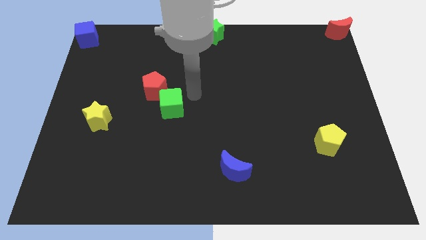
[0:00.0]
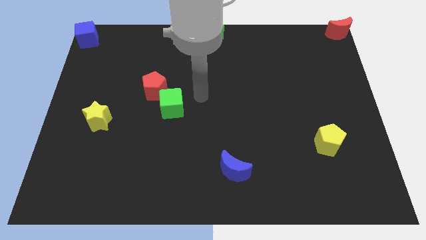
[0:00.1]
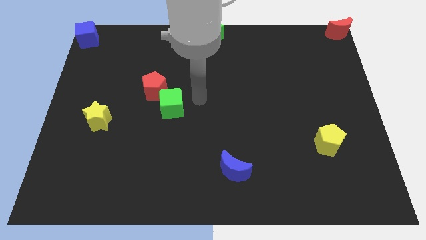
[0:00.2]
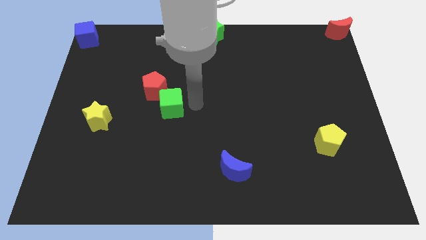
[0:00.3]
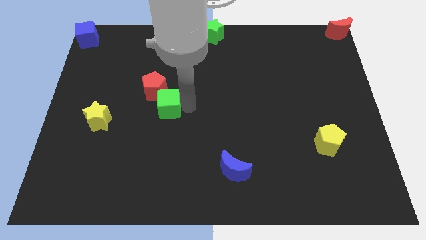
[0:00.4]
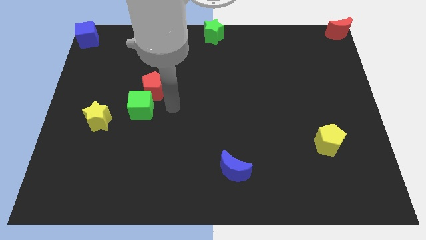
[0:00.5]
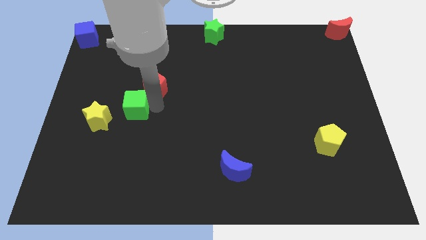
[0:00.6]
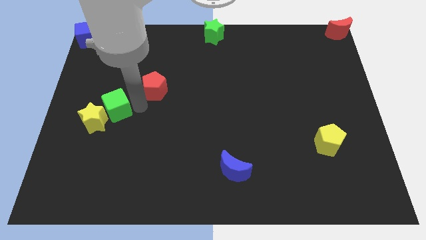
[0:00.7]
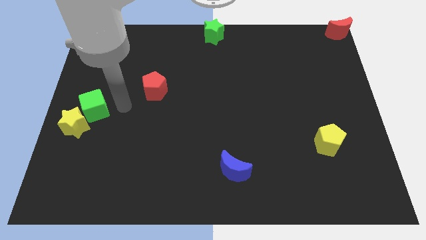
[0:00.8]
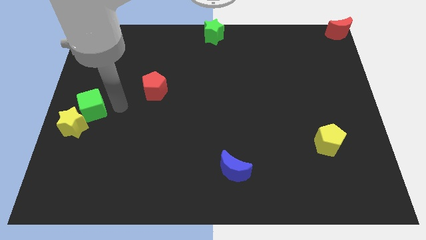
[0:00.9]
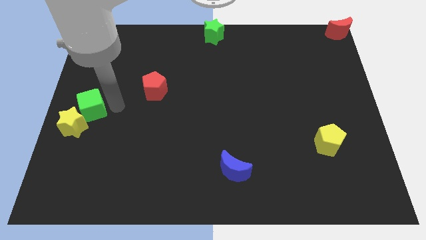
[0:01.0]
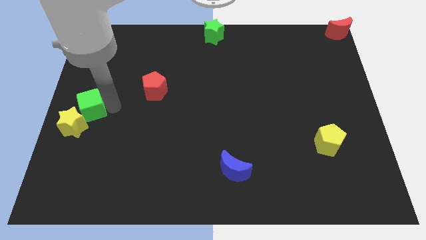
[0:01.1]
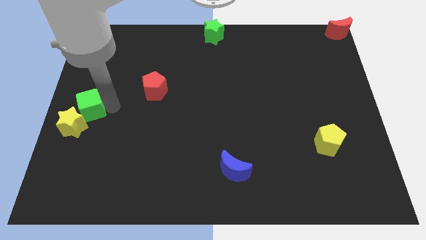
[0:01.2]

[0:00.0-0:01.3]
push the green cube into the yellow star

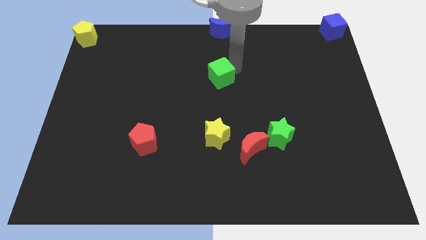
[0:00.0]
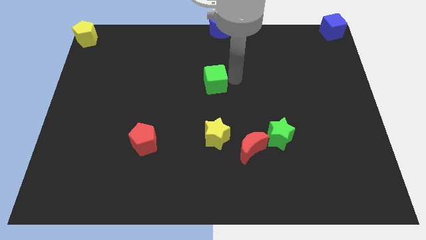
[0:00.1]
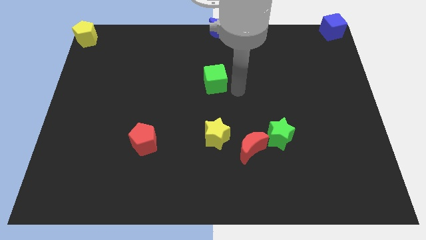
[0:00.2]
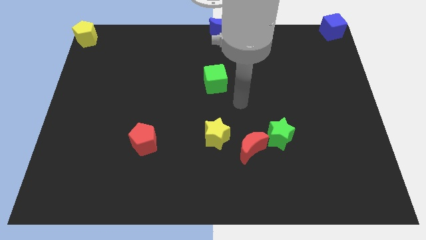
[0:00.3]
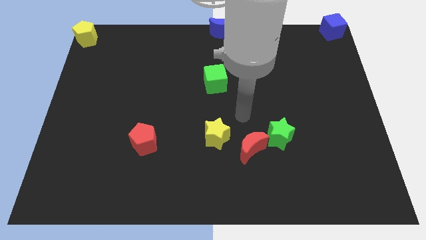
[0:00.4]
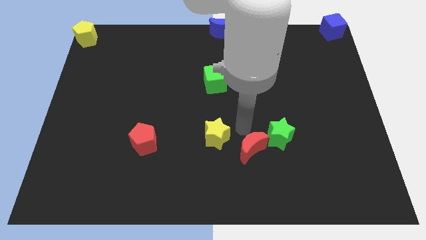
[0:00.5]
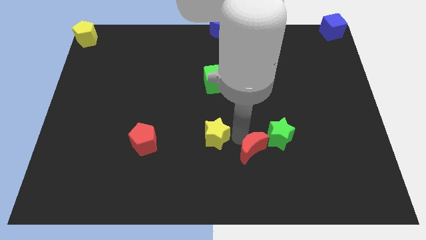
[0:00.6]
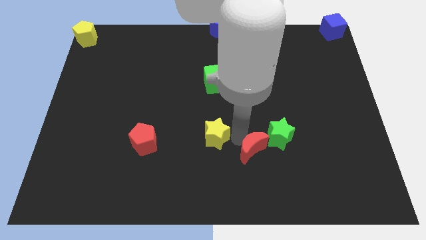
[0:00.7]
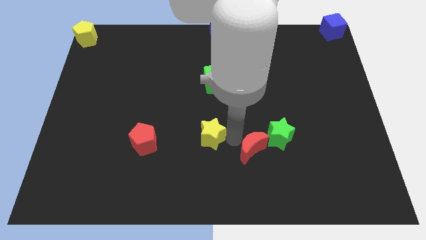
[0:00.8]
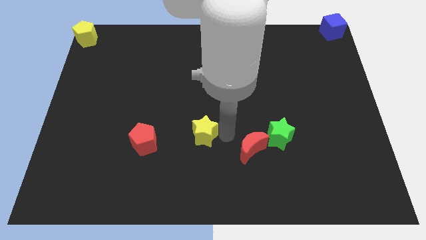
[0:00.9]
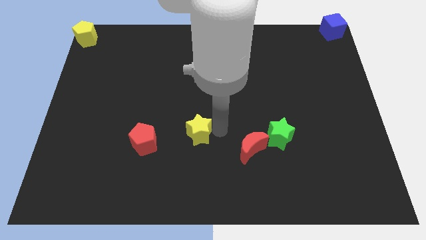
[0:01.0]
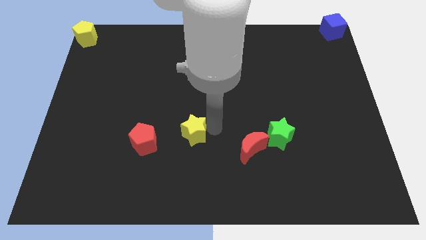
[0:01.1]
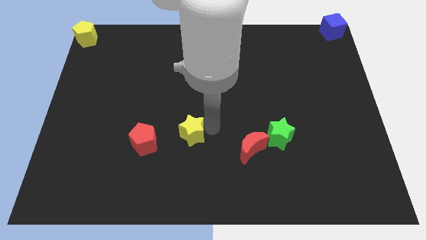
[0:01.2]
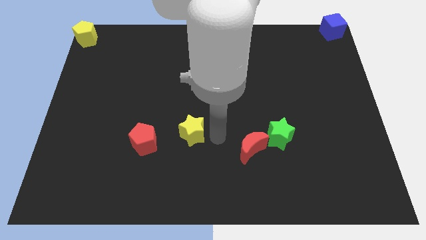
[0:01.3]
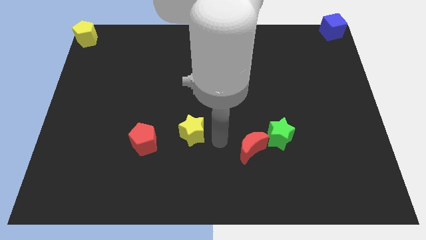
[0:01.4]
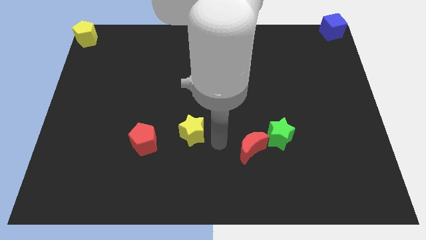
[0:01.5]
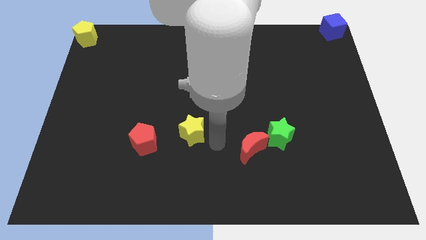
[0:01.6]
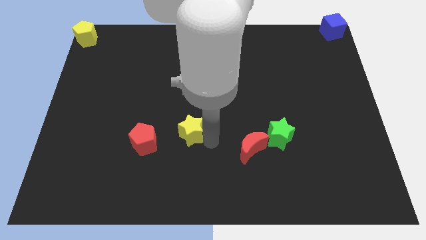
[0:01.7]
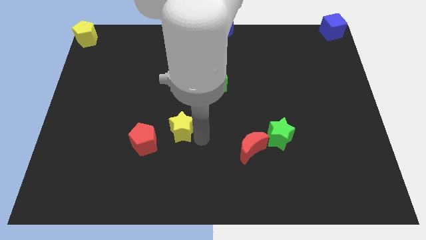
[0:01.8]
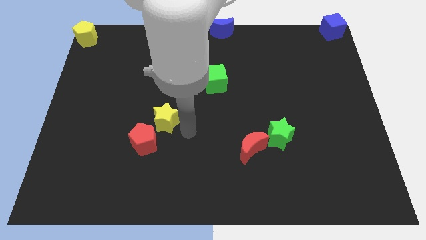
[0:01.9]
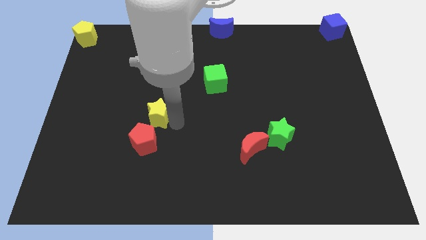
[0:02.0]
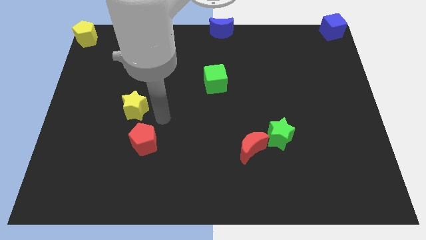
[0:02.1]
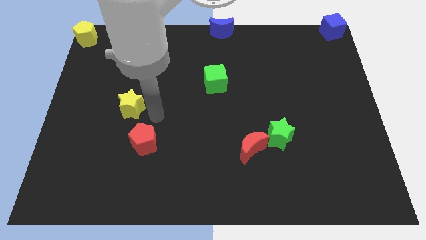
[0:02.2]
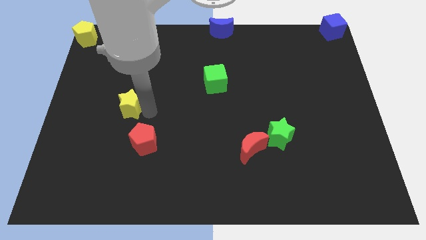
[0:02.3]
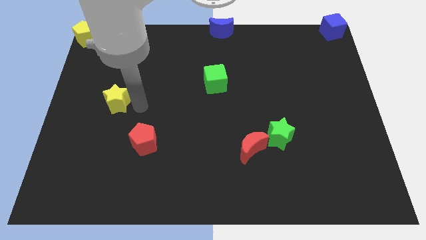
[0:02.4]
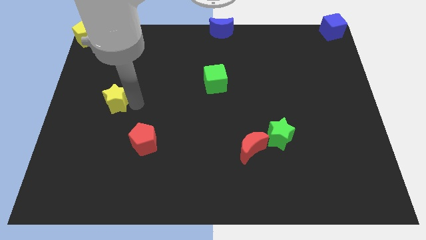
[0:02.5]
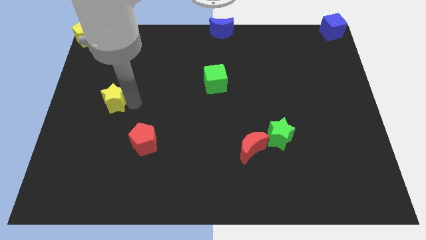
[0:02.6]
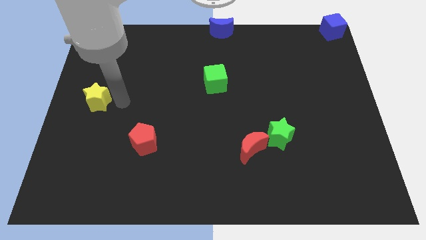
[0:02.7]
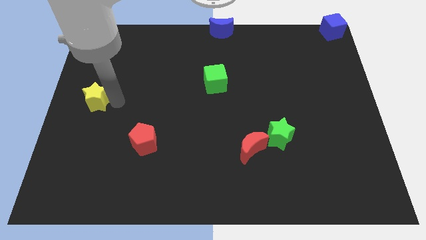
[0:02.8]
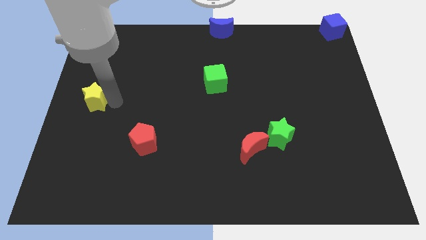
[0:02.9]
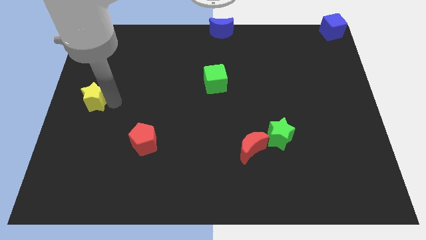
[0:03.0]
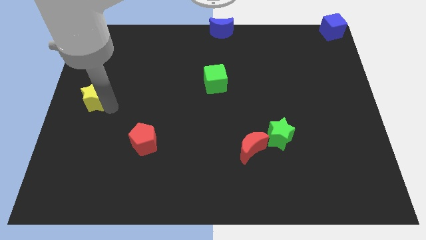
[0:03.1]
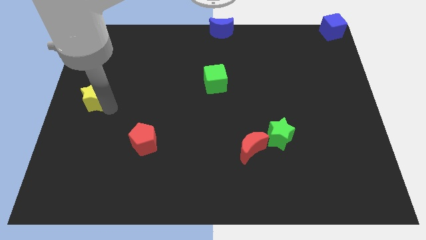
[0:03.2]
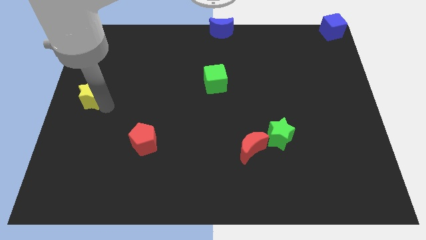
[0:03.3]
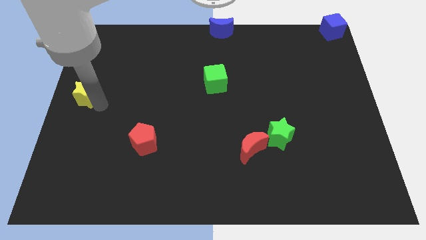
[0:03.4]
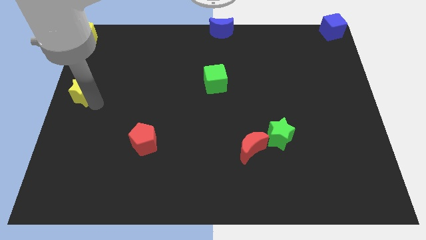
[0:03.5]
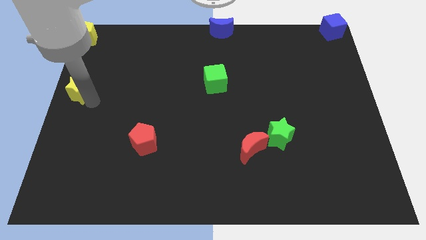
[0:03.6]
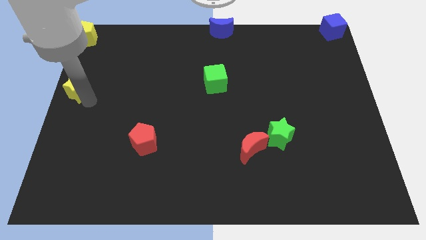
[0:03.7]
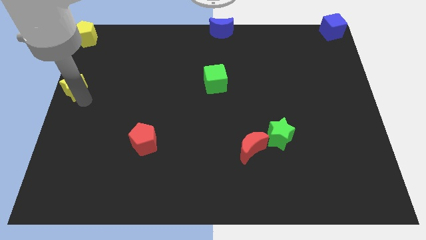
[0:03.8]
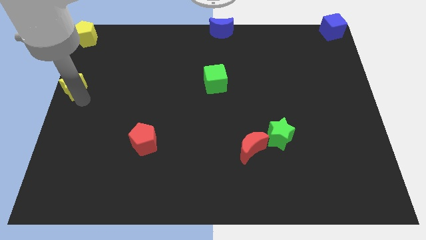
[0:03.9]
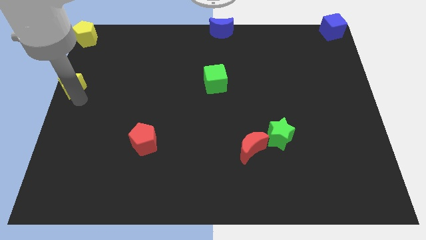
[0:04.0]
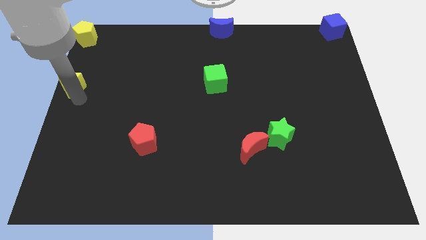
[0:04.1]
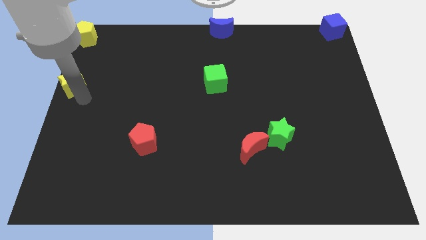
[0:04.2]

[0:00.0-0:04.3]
move the yellow star to the middle left

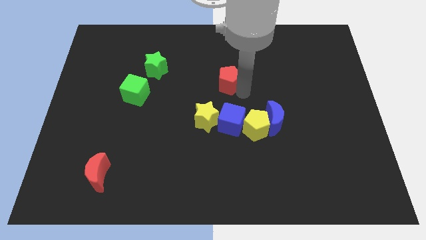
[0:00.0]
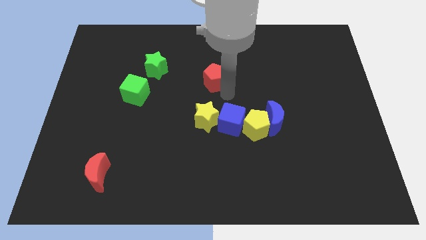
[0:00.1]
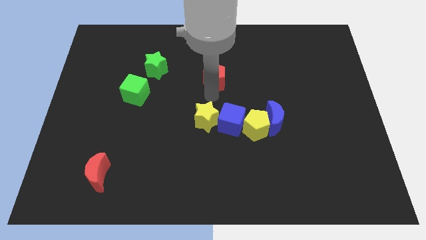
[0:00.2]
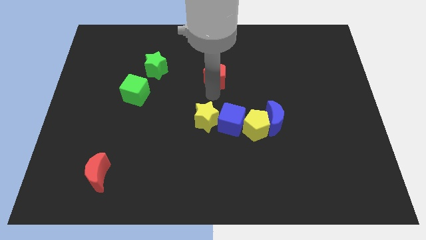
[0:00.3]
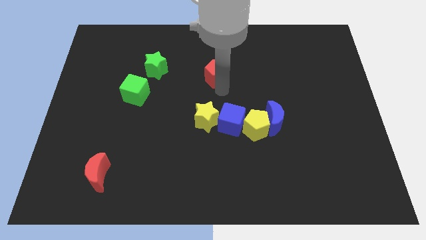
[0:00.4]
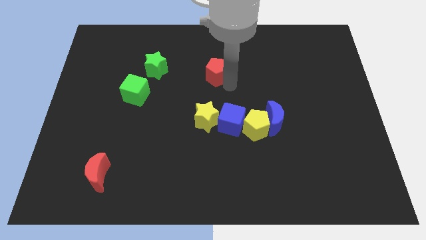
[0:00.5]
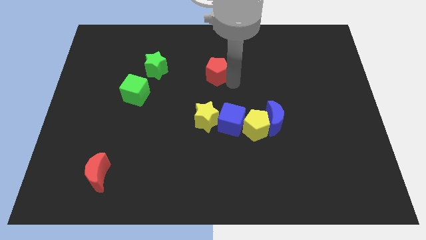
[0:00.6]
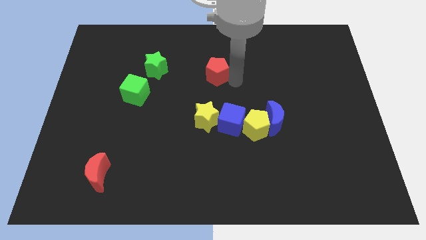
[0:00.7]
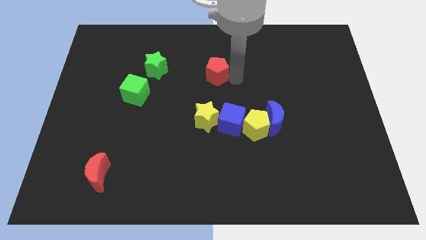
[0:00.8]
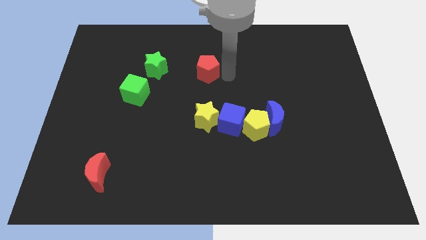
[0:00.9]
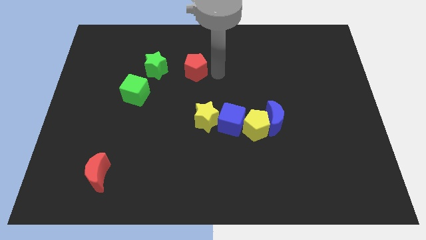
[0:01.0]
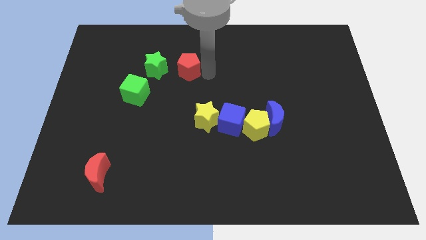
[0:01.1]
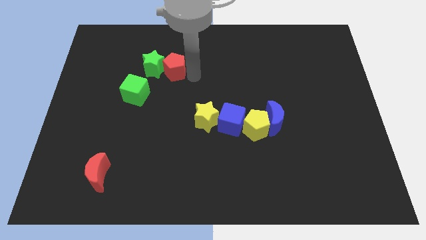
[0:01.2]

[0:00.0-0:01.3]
push the red pentagon into the green star

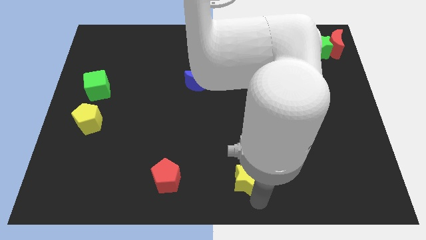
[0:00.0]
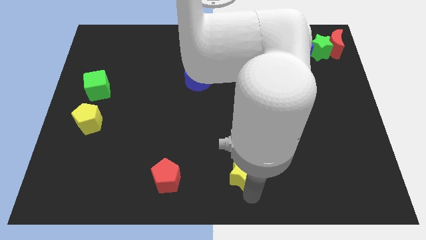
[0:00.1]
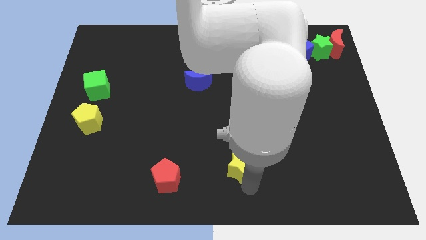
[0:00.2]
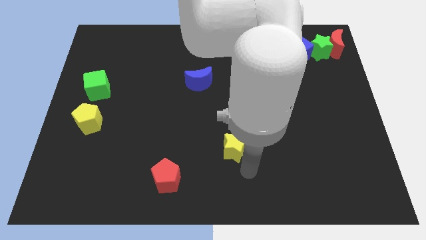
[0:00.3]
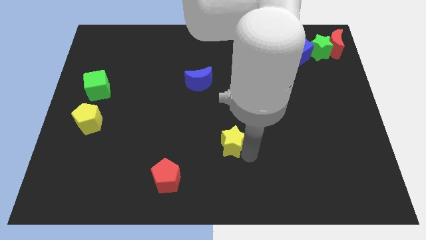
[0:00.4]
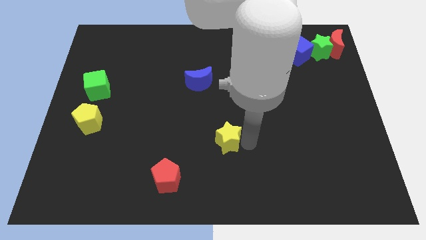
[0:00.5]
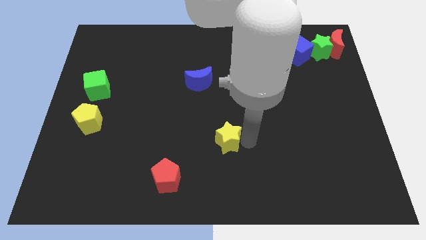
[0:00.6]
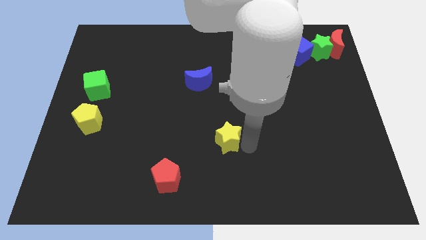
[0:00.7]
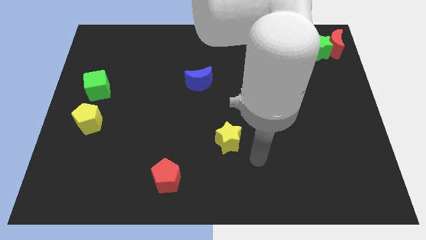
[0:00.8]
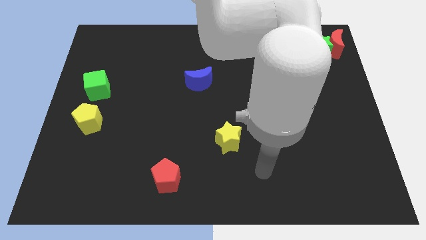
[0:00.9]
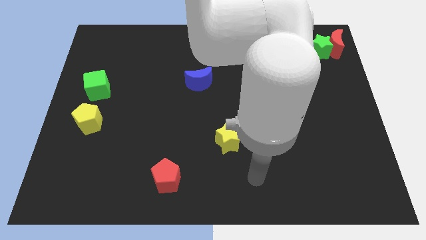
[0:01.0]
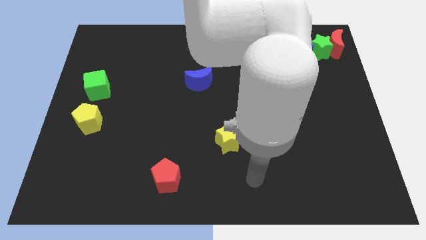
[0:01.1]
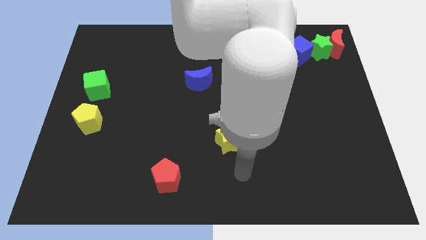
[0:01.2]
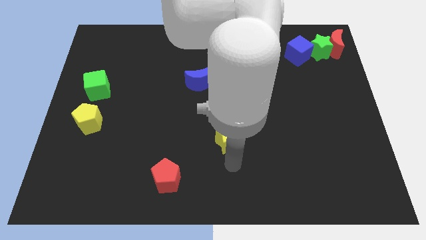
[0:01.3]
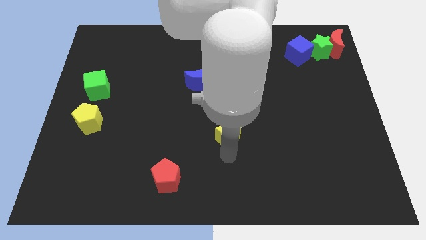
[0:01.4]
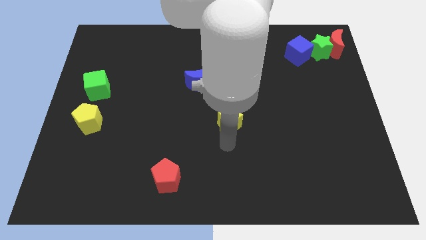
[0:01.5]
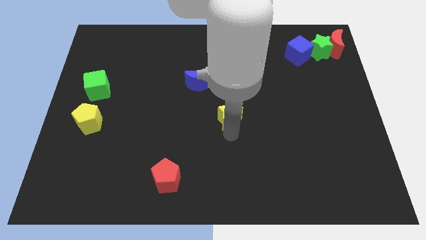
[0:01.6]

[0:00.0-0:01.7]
place yellow star to the center of the board

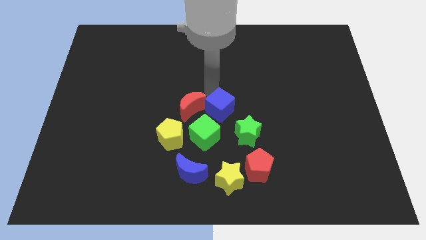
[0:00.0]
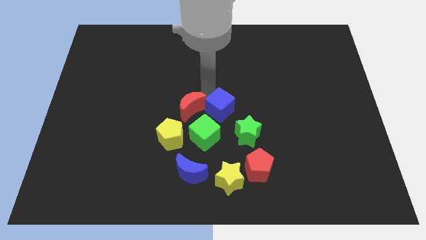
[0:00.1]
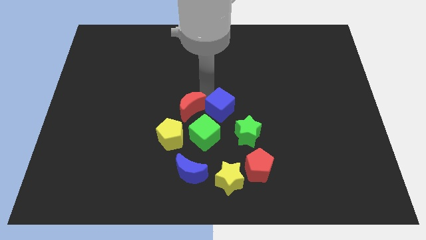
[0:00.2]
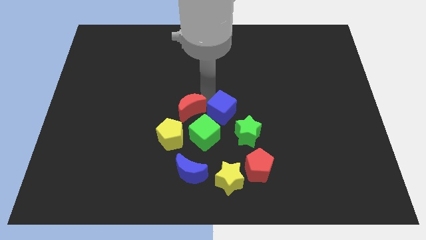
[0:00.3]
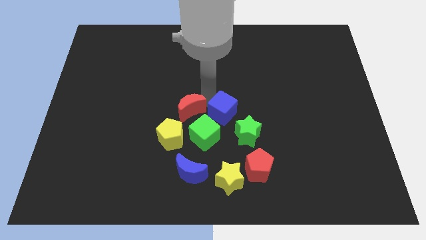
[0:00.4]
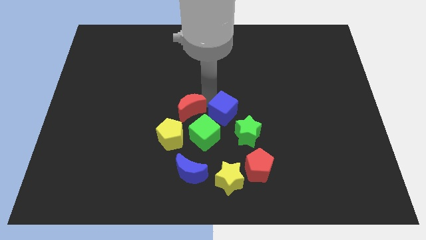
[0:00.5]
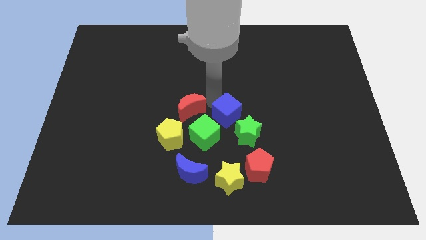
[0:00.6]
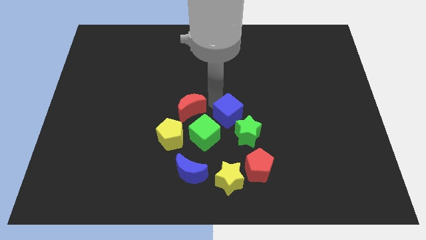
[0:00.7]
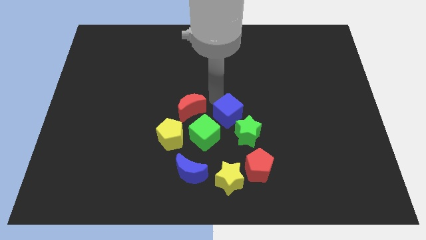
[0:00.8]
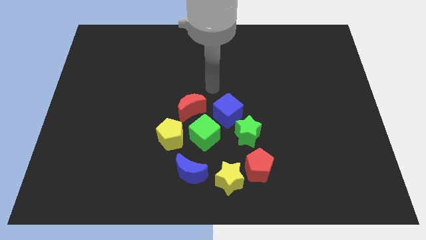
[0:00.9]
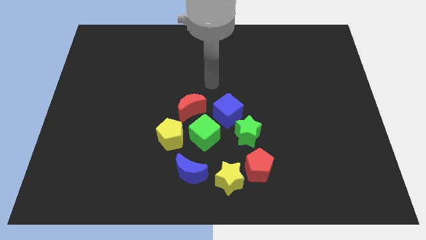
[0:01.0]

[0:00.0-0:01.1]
push the blue cube towards group of elements
